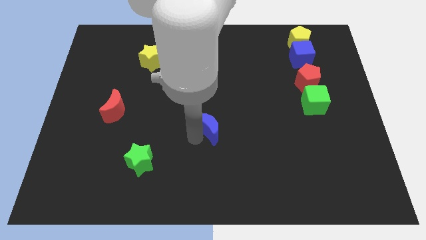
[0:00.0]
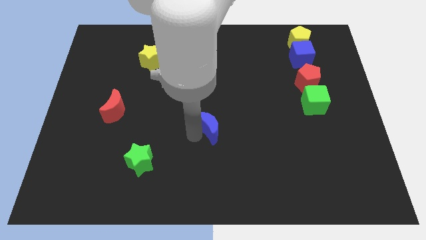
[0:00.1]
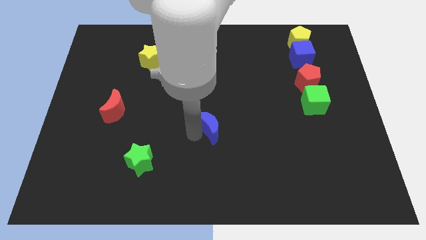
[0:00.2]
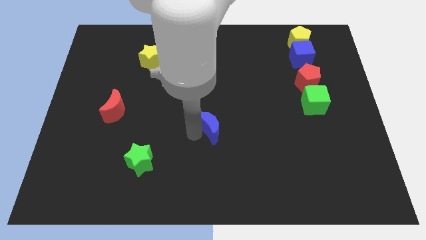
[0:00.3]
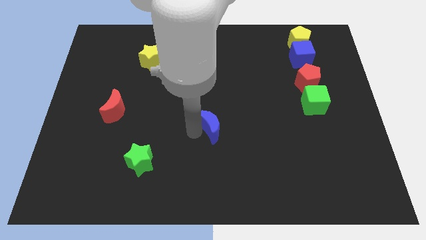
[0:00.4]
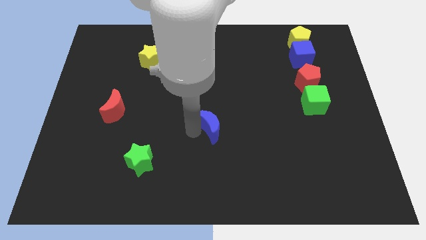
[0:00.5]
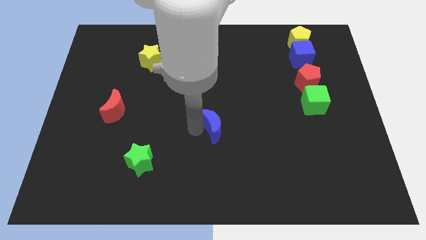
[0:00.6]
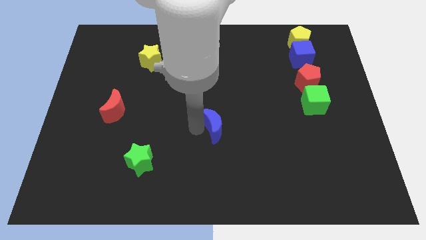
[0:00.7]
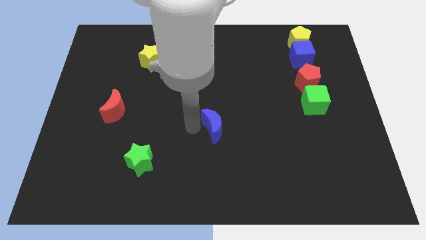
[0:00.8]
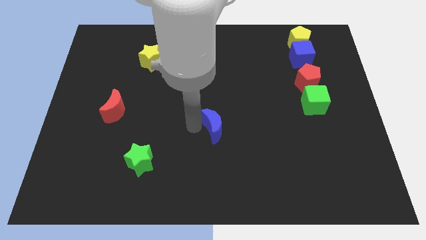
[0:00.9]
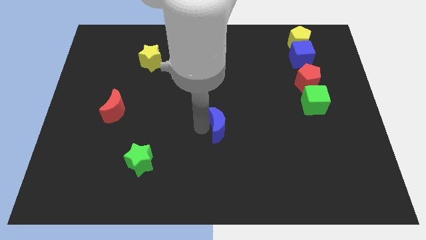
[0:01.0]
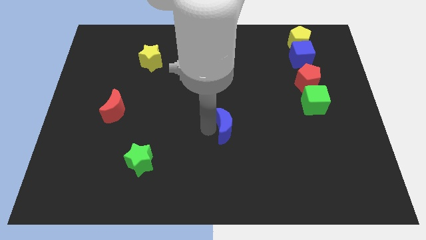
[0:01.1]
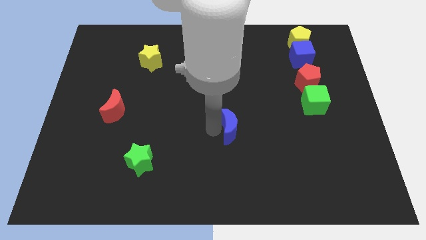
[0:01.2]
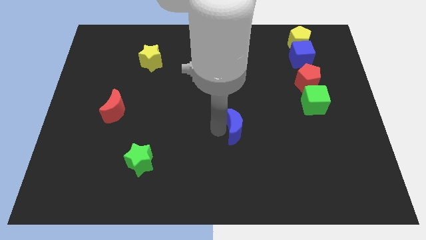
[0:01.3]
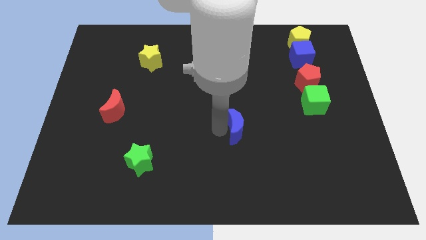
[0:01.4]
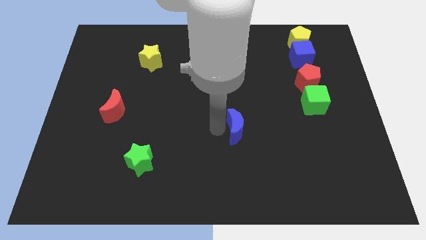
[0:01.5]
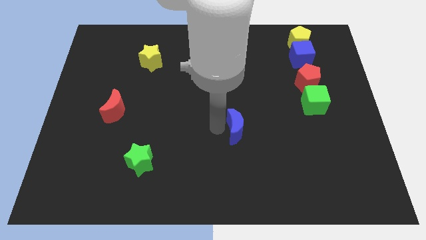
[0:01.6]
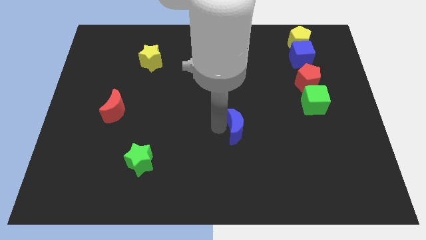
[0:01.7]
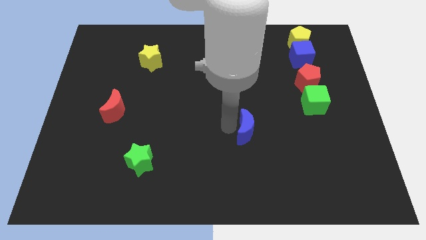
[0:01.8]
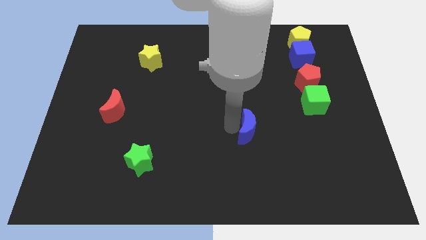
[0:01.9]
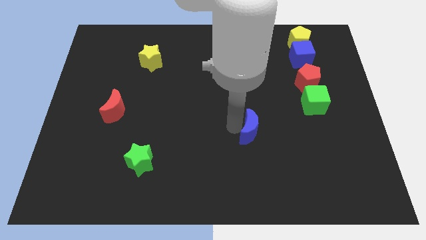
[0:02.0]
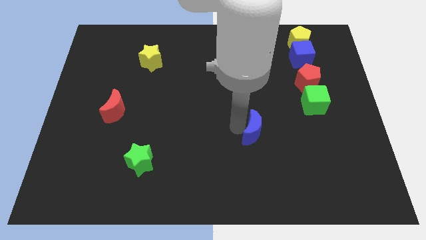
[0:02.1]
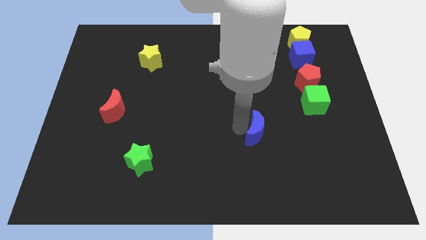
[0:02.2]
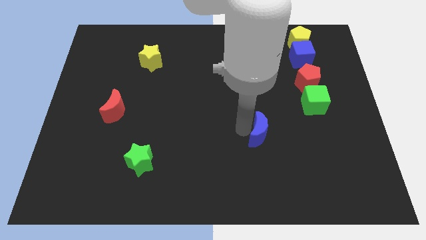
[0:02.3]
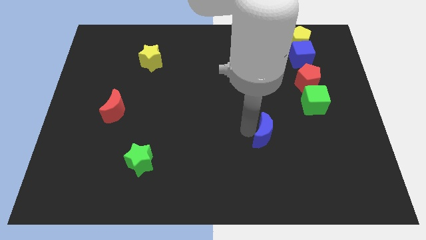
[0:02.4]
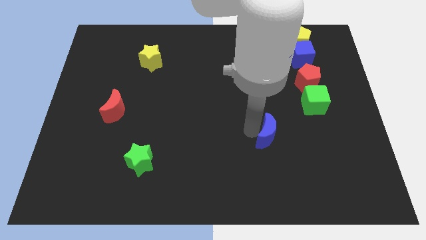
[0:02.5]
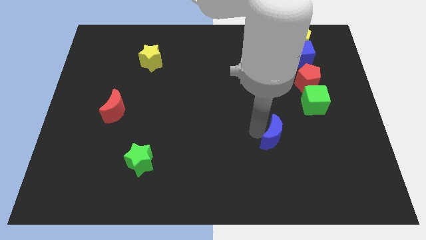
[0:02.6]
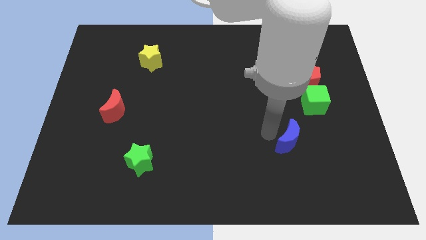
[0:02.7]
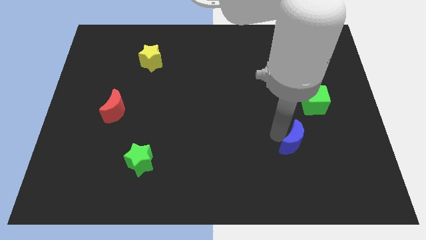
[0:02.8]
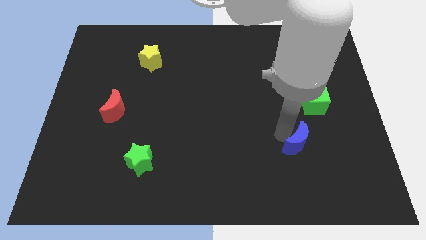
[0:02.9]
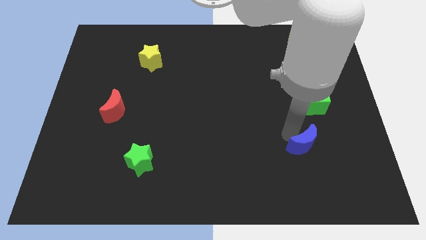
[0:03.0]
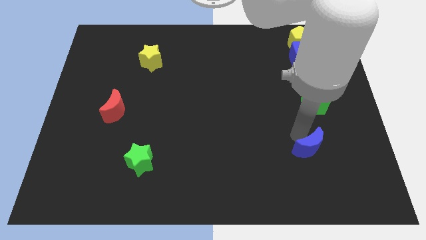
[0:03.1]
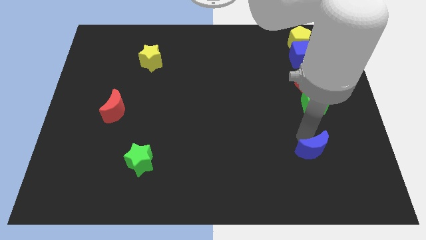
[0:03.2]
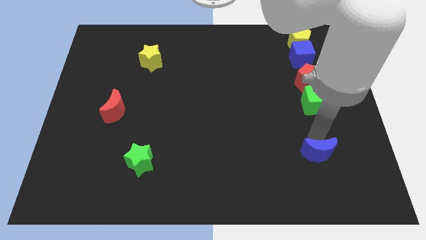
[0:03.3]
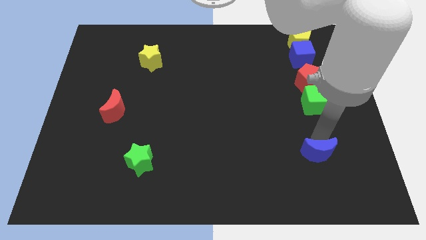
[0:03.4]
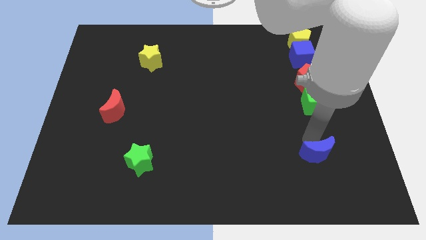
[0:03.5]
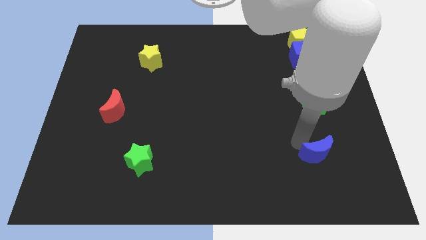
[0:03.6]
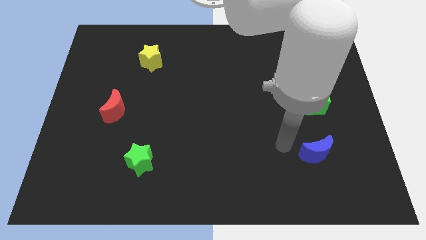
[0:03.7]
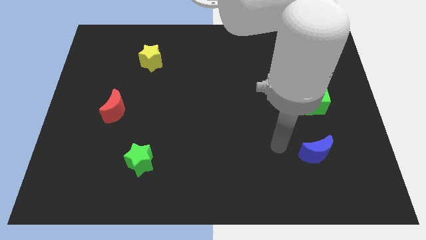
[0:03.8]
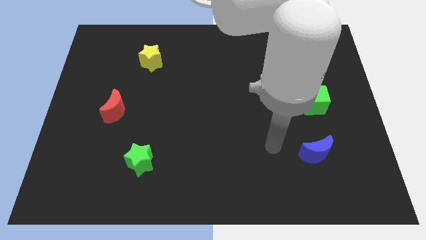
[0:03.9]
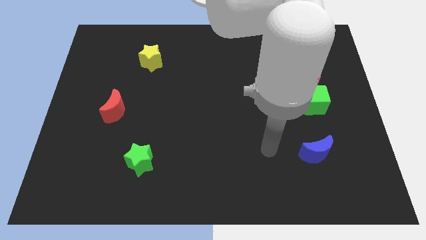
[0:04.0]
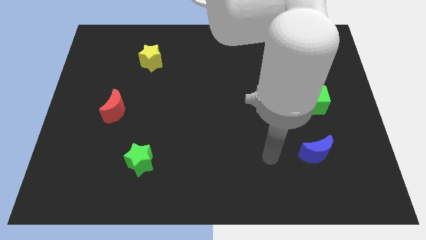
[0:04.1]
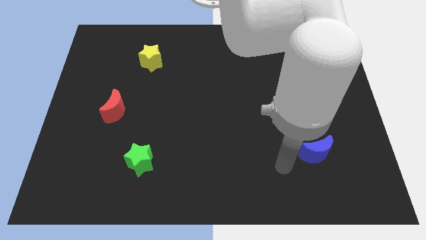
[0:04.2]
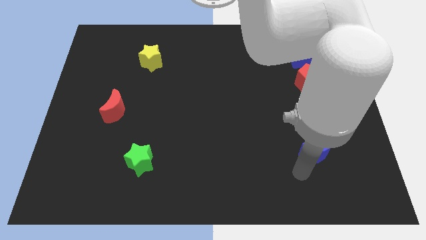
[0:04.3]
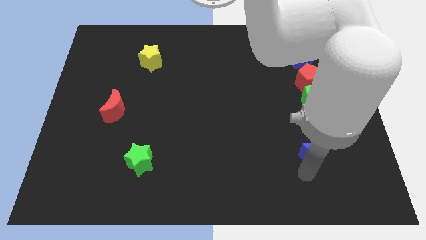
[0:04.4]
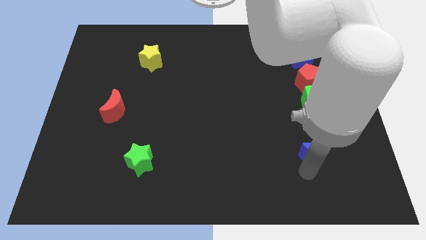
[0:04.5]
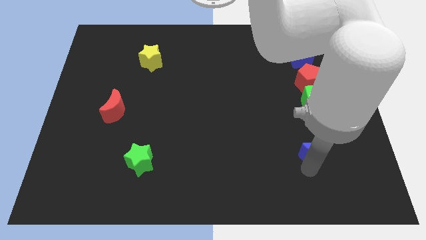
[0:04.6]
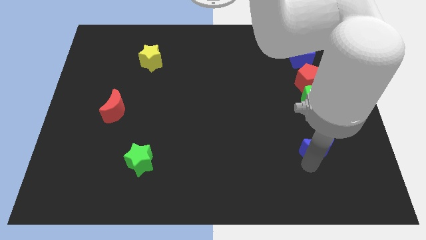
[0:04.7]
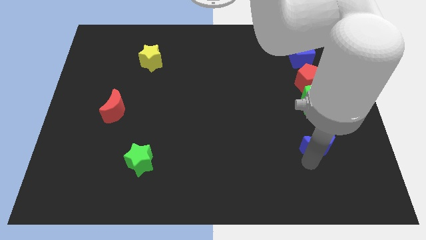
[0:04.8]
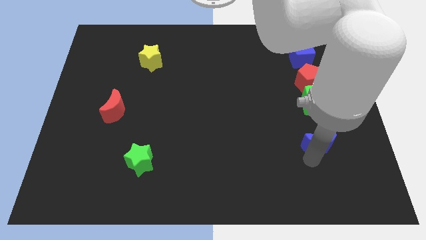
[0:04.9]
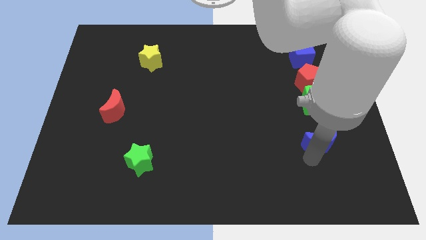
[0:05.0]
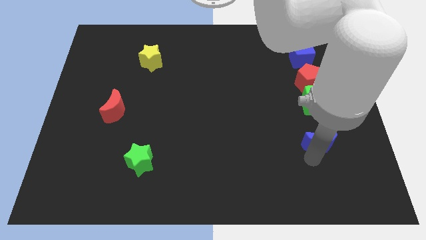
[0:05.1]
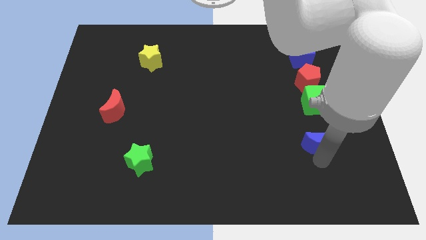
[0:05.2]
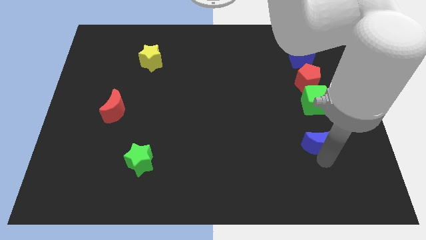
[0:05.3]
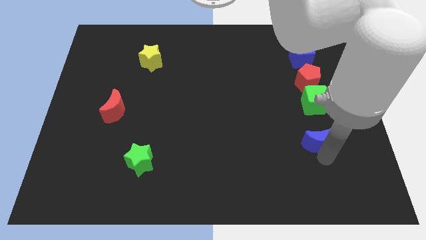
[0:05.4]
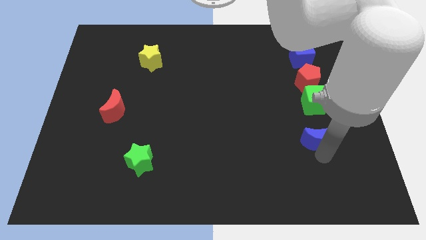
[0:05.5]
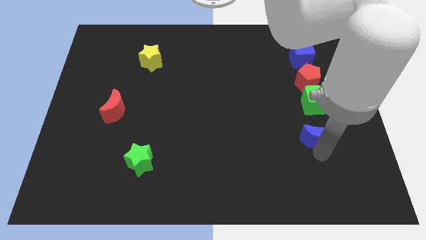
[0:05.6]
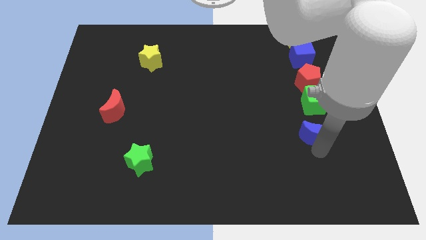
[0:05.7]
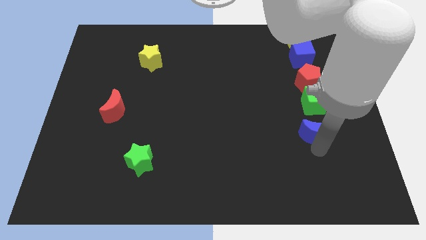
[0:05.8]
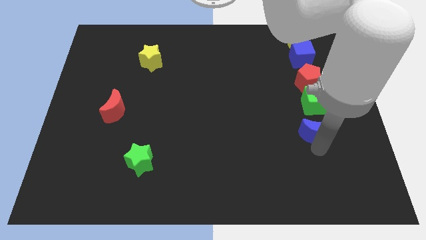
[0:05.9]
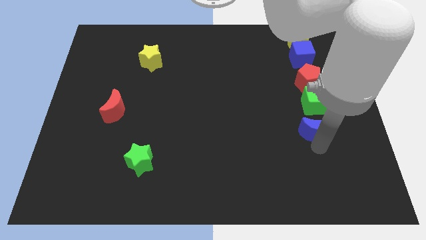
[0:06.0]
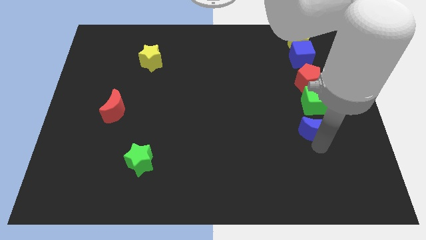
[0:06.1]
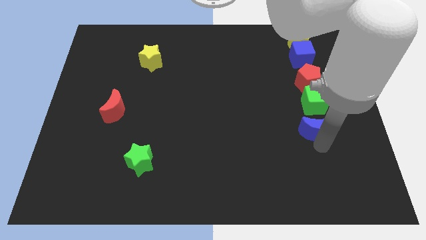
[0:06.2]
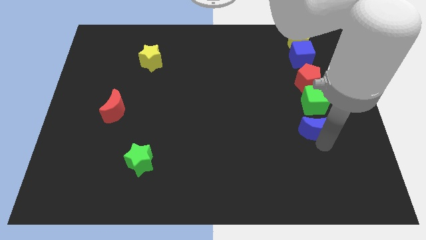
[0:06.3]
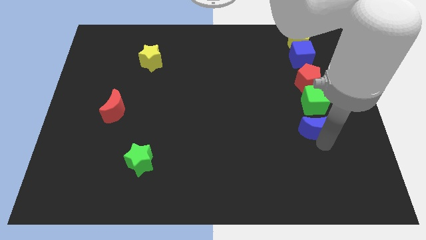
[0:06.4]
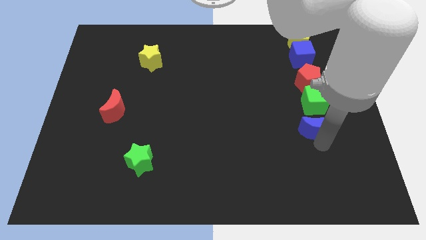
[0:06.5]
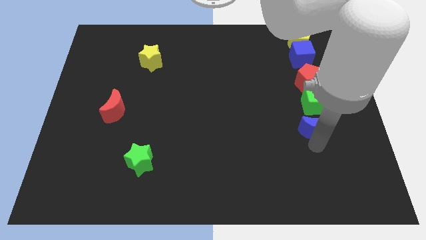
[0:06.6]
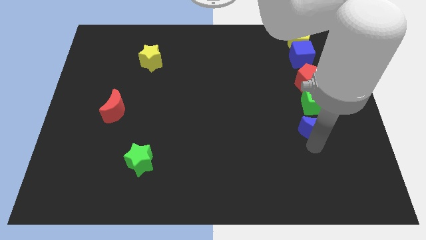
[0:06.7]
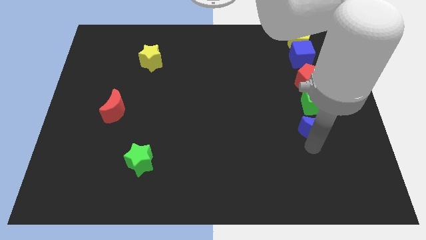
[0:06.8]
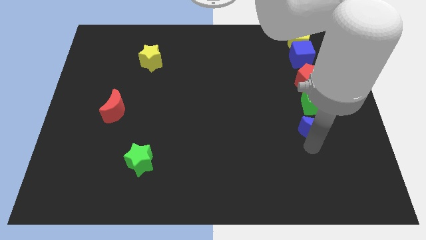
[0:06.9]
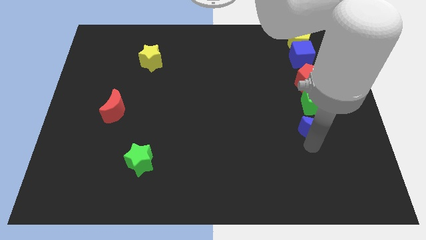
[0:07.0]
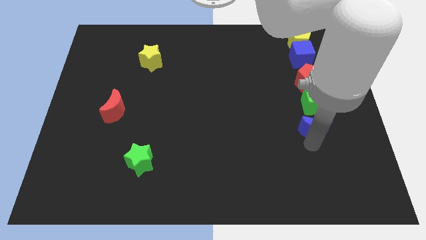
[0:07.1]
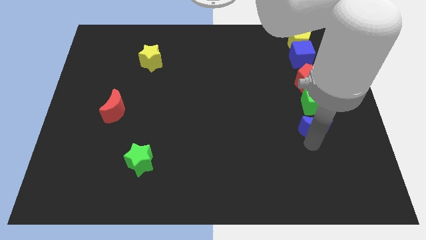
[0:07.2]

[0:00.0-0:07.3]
drag blue moon below green cube

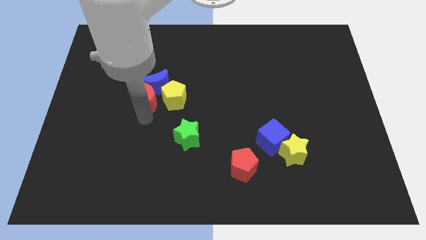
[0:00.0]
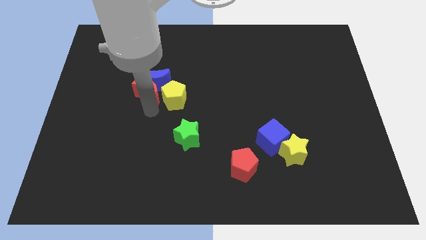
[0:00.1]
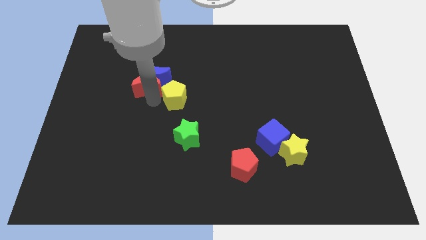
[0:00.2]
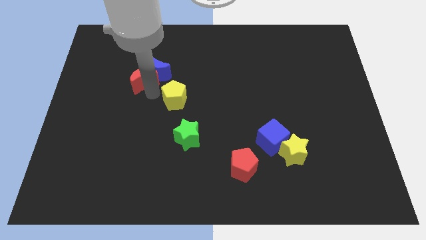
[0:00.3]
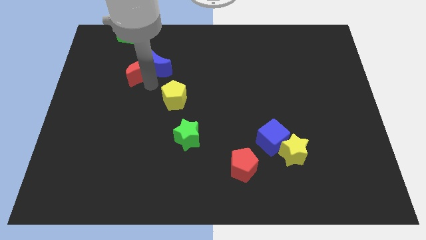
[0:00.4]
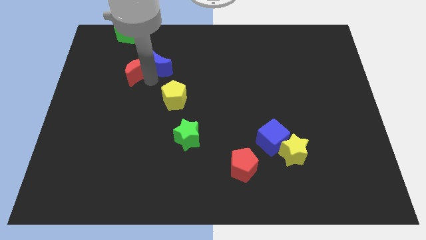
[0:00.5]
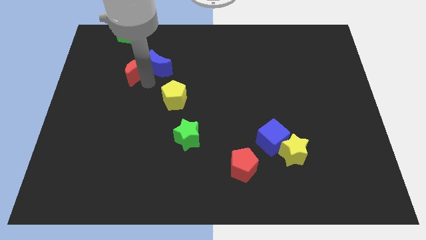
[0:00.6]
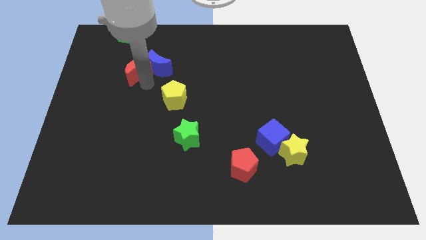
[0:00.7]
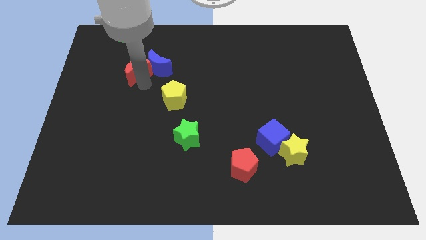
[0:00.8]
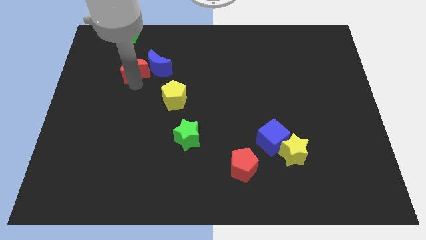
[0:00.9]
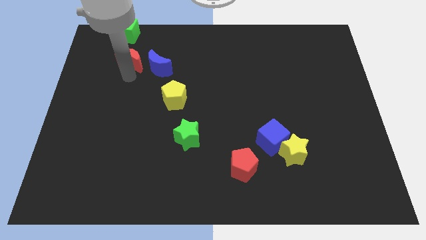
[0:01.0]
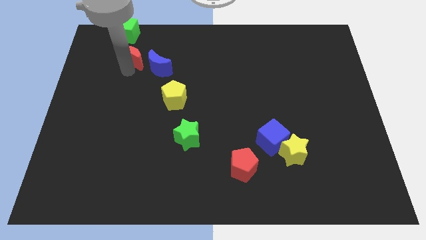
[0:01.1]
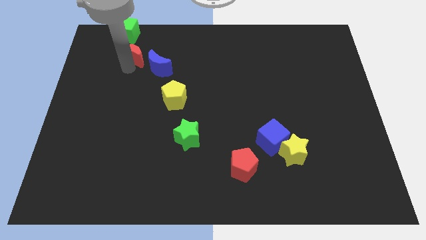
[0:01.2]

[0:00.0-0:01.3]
push the red crescent to the bottom of the green cube

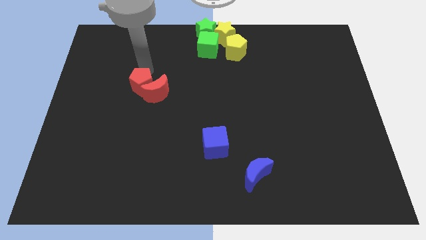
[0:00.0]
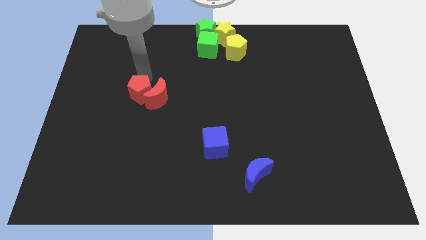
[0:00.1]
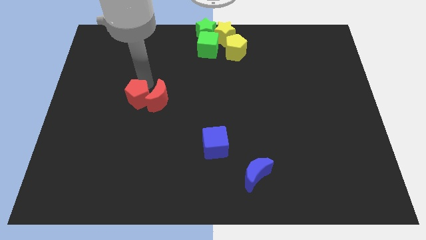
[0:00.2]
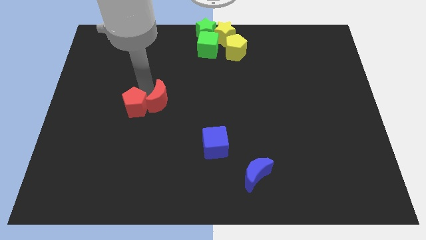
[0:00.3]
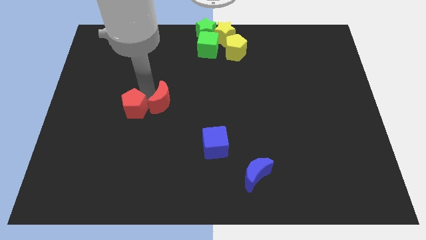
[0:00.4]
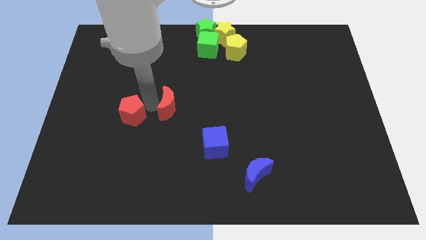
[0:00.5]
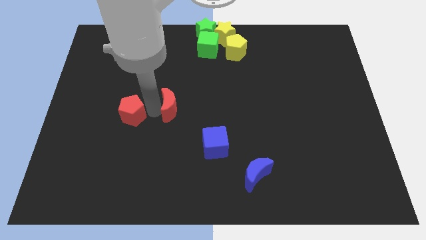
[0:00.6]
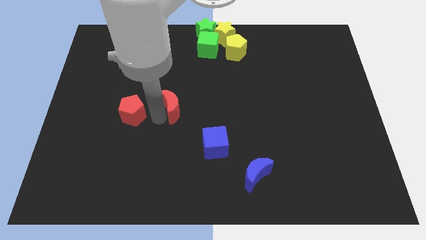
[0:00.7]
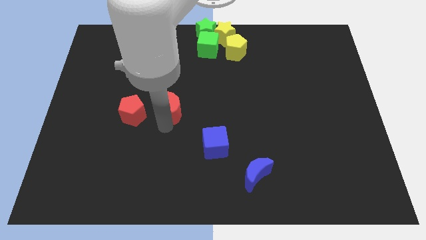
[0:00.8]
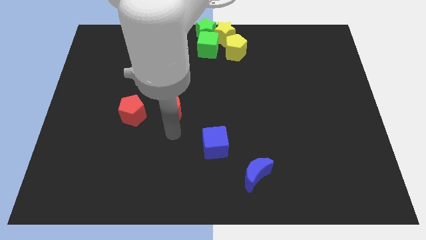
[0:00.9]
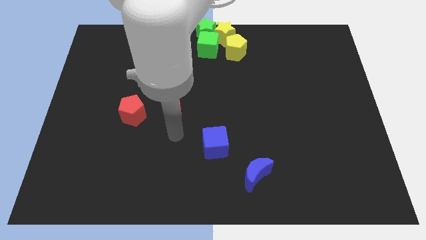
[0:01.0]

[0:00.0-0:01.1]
separate the red blocks
